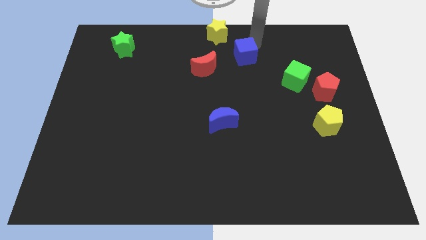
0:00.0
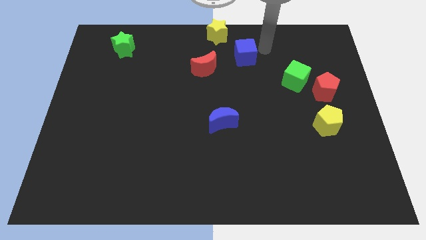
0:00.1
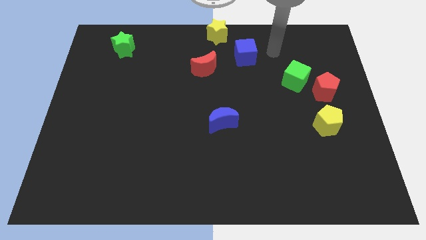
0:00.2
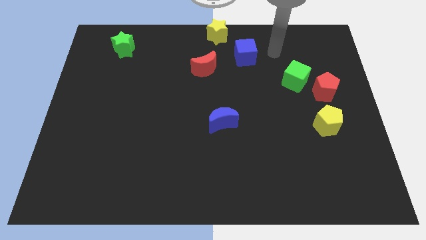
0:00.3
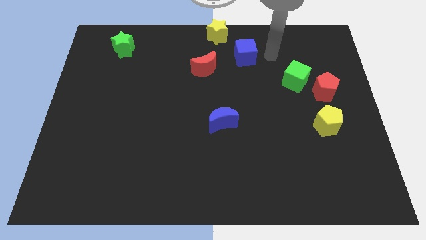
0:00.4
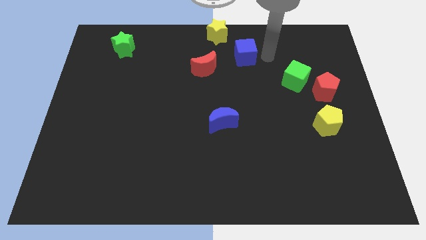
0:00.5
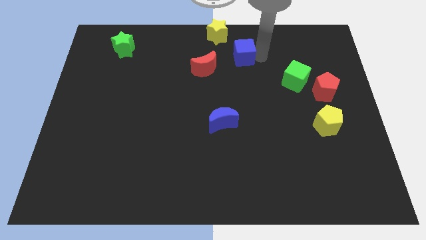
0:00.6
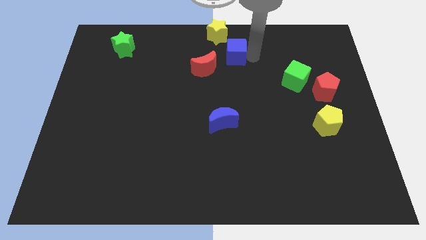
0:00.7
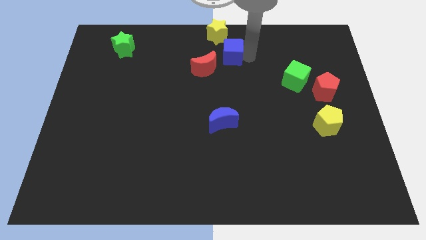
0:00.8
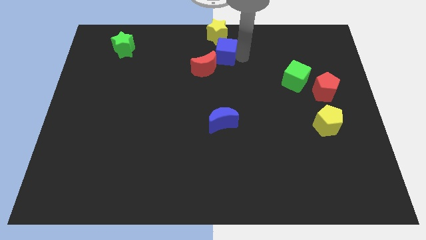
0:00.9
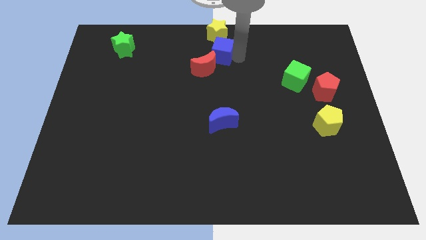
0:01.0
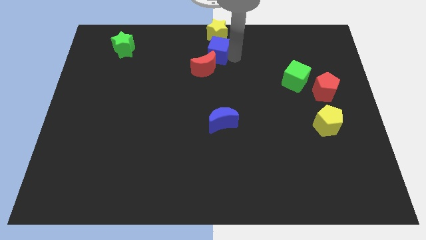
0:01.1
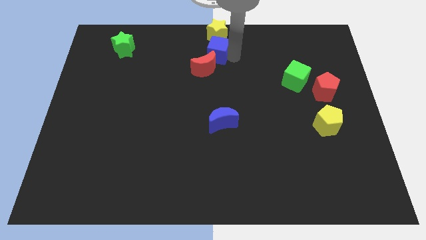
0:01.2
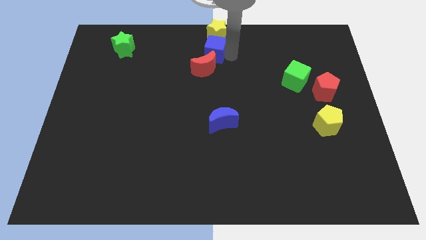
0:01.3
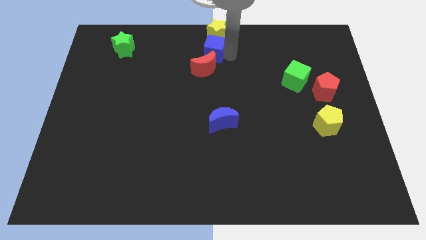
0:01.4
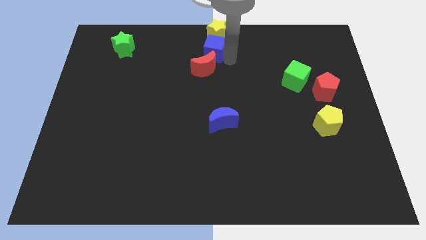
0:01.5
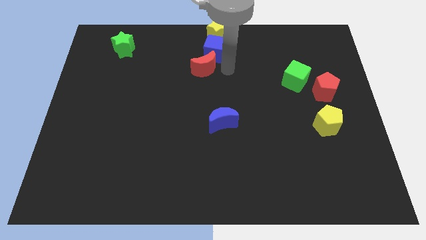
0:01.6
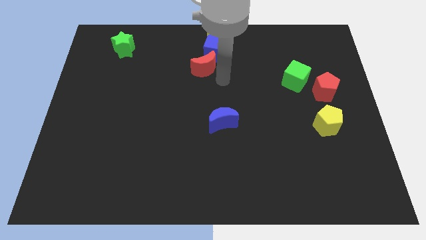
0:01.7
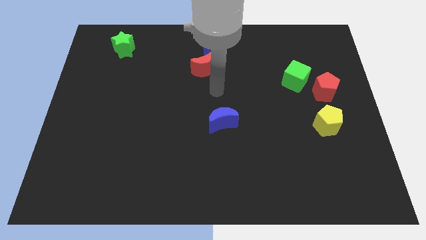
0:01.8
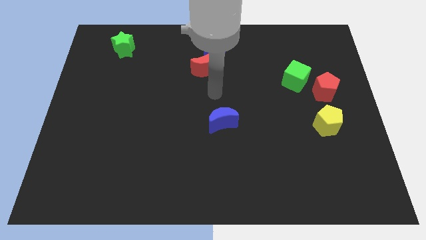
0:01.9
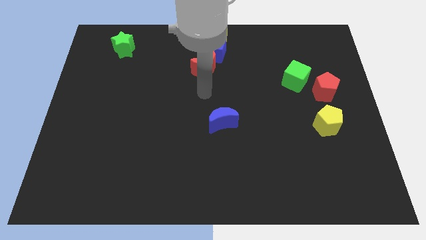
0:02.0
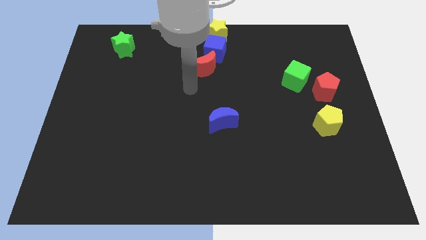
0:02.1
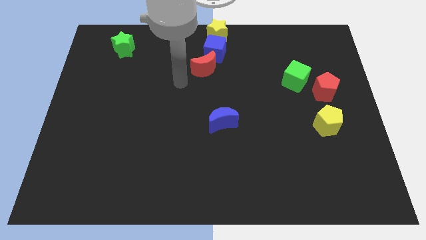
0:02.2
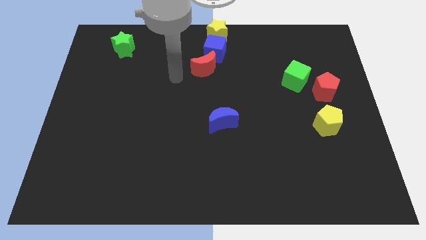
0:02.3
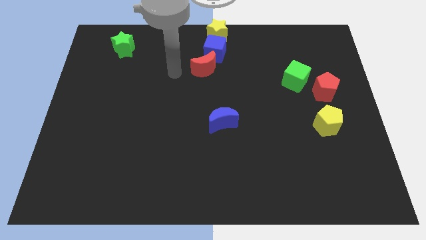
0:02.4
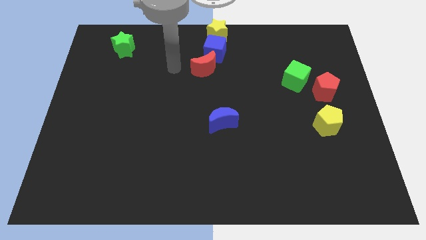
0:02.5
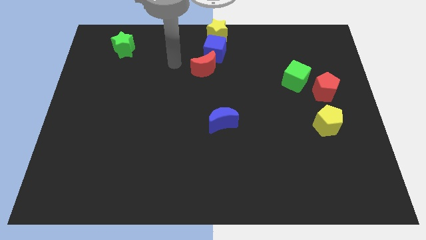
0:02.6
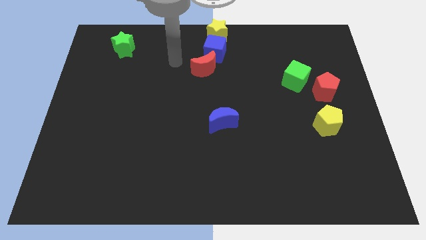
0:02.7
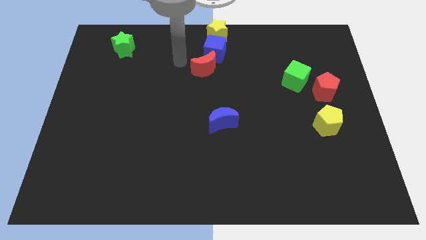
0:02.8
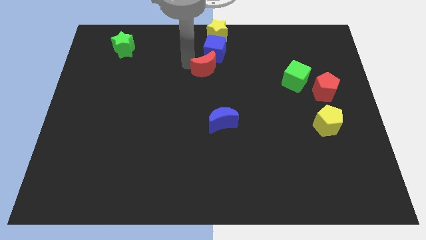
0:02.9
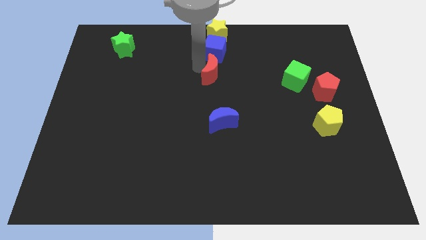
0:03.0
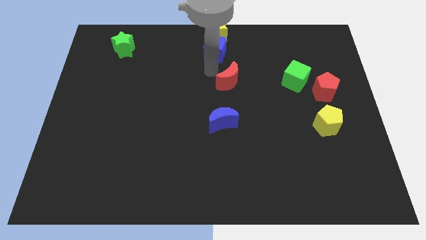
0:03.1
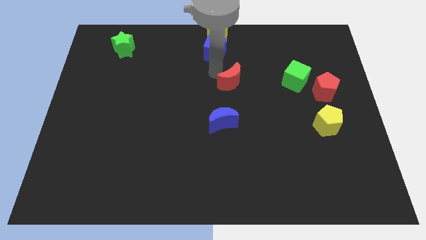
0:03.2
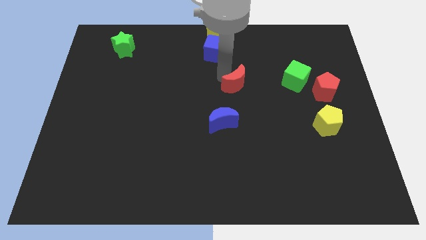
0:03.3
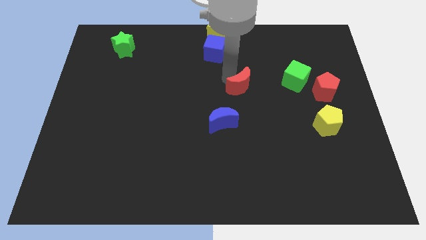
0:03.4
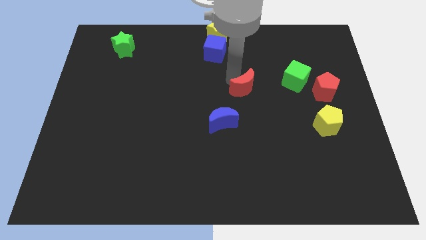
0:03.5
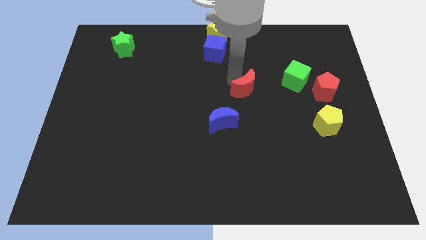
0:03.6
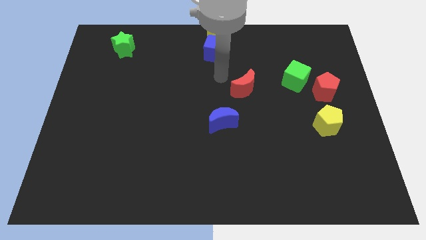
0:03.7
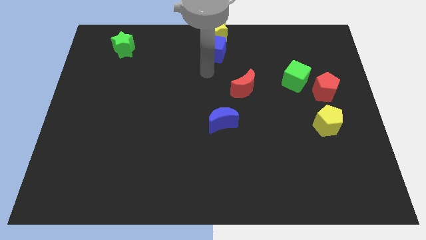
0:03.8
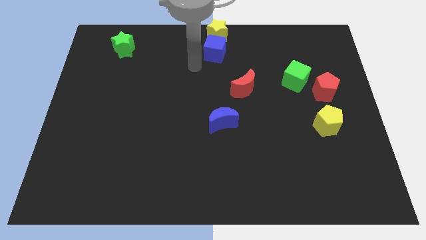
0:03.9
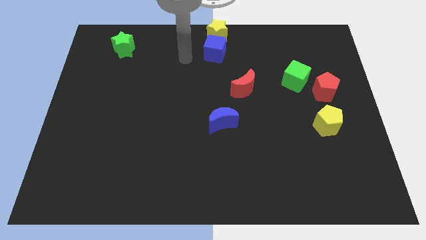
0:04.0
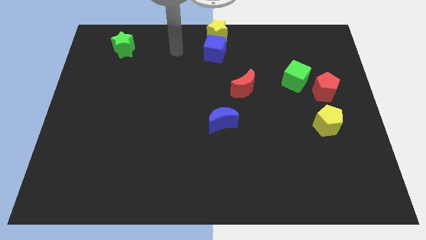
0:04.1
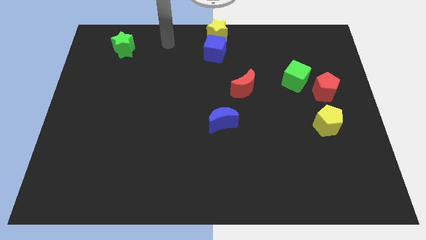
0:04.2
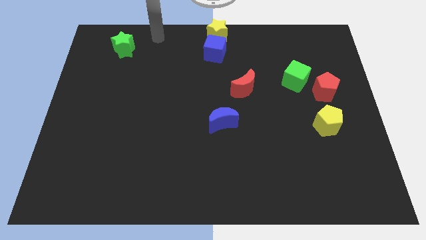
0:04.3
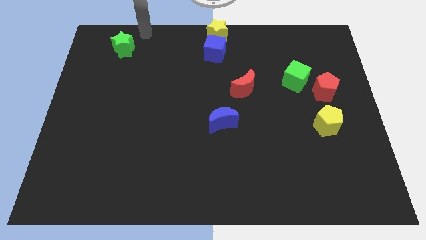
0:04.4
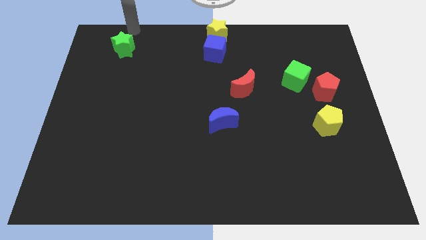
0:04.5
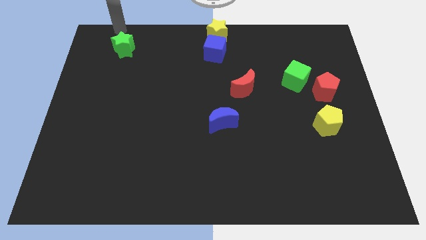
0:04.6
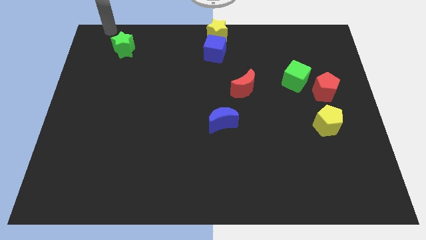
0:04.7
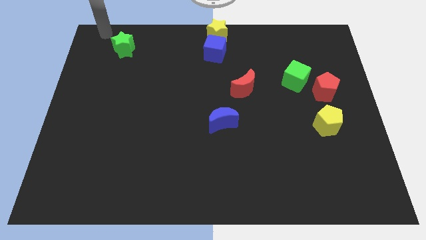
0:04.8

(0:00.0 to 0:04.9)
move the blue cube to the bottom of the yellow star

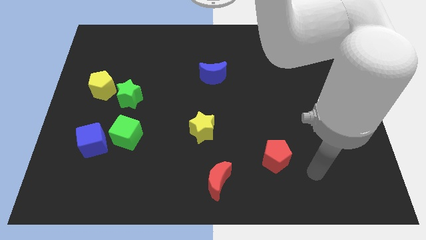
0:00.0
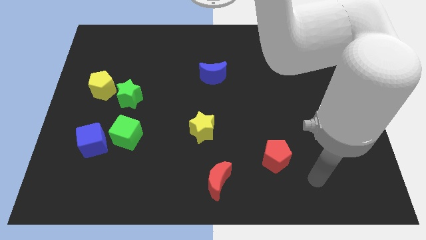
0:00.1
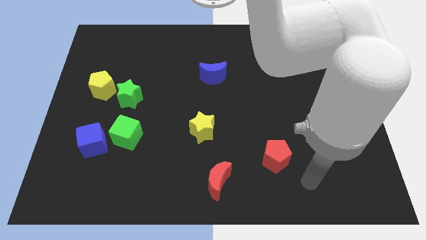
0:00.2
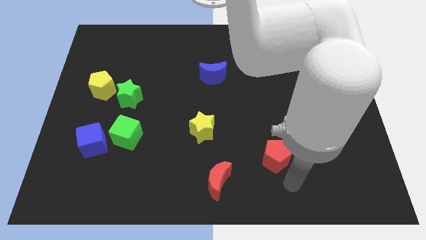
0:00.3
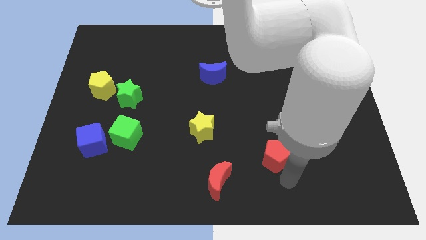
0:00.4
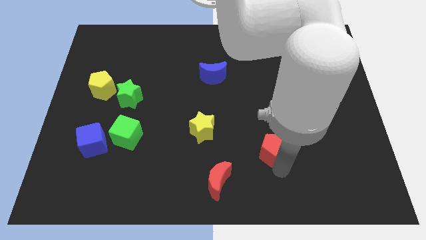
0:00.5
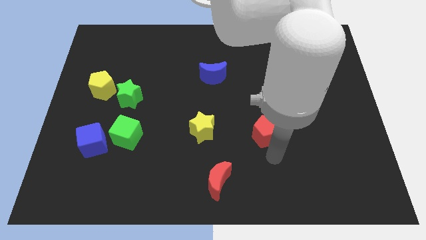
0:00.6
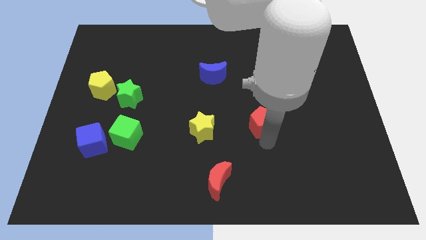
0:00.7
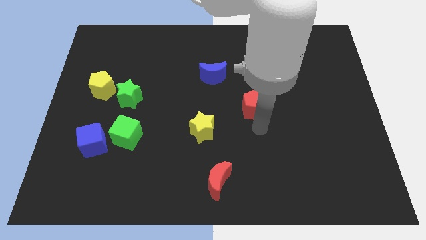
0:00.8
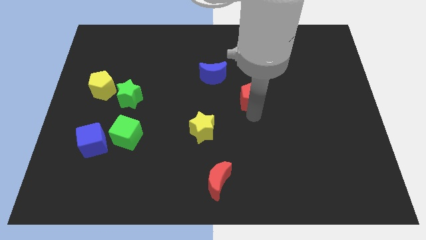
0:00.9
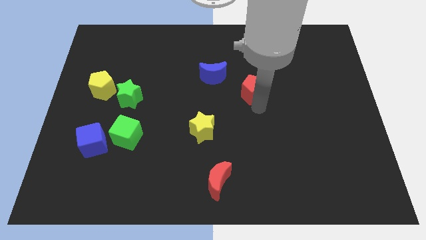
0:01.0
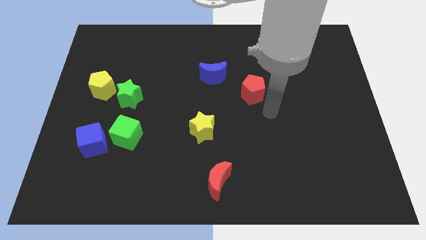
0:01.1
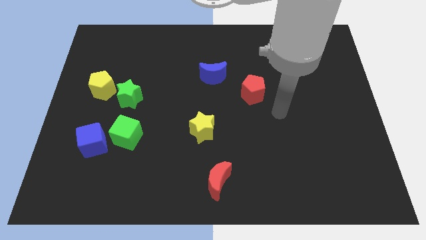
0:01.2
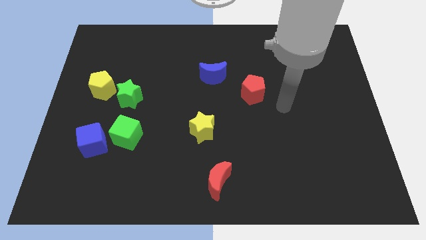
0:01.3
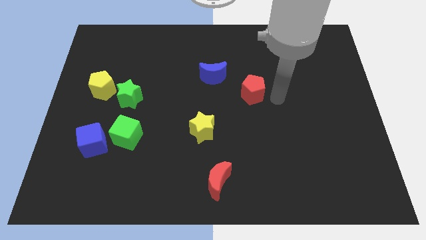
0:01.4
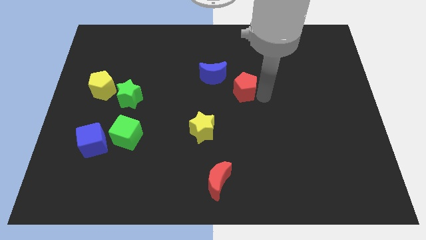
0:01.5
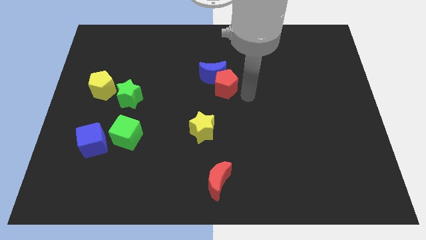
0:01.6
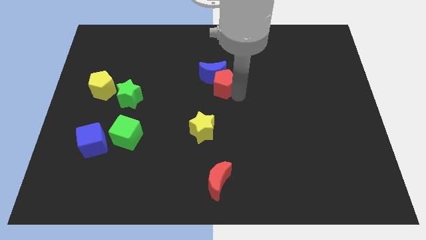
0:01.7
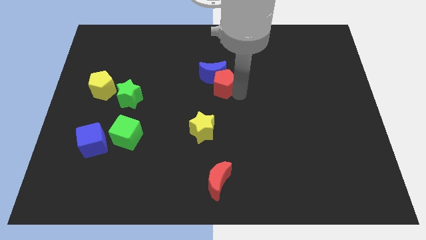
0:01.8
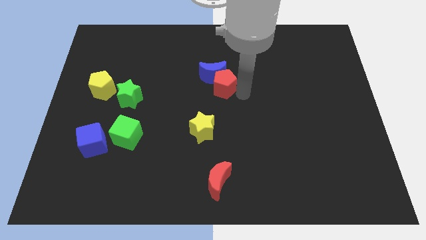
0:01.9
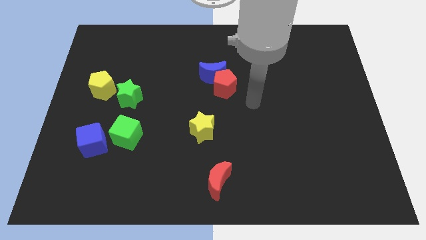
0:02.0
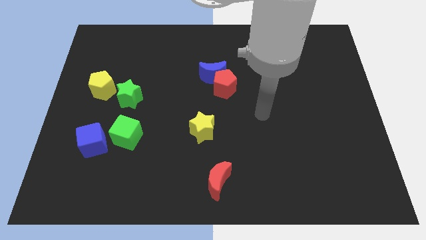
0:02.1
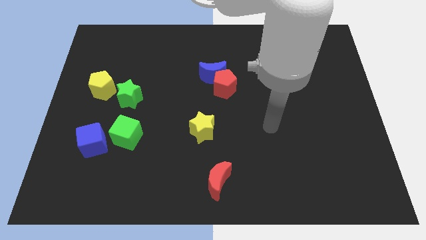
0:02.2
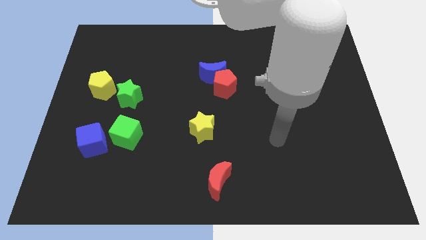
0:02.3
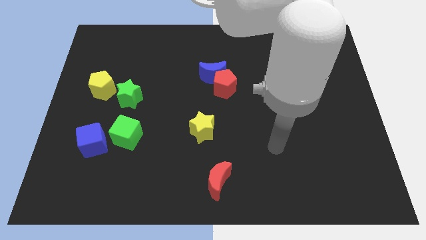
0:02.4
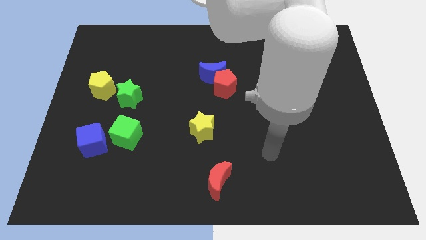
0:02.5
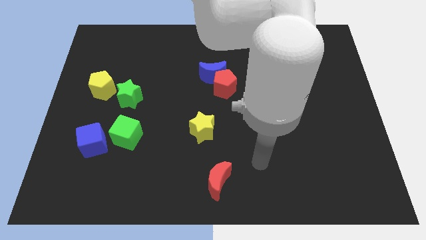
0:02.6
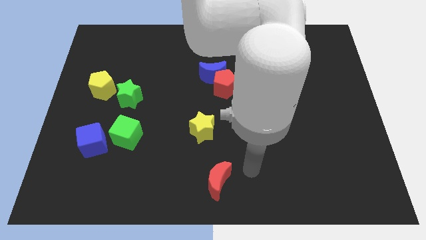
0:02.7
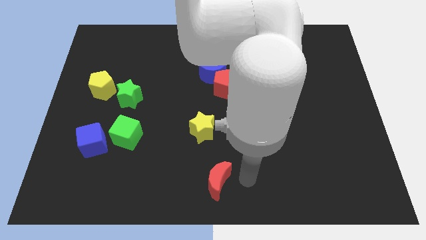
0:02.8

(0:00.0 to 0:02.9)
move the red pentagon into the blue crescent

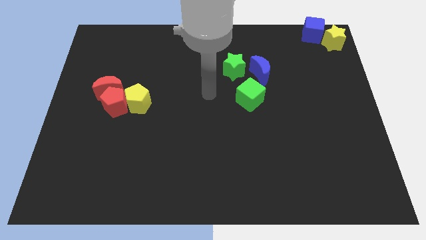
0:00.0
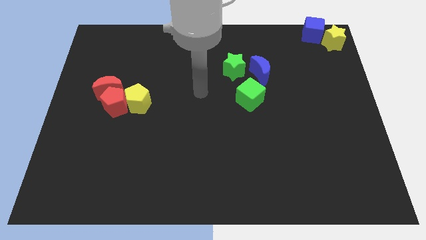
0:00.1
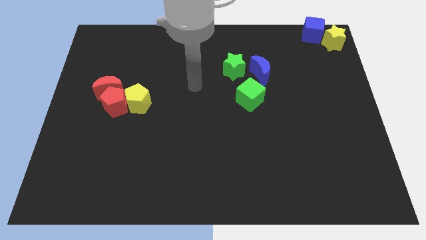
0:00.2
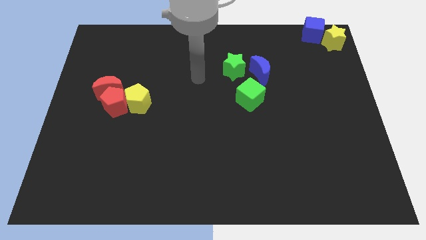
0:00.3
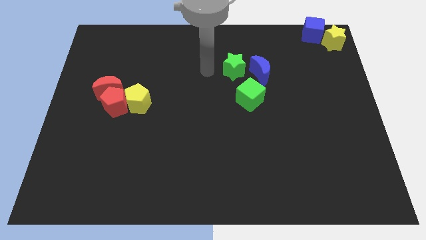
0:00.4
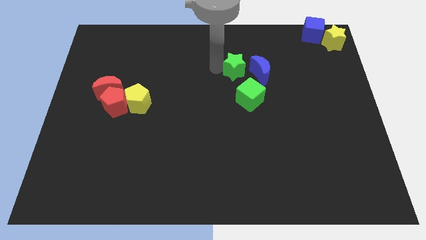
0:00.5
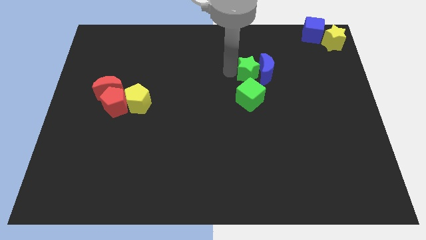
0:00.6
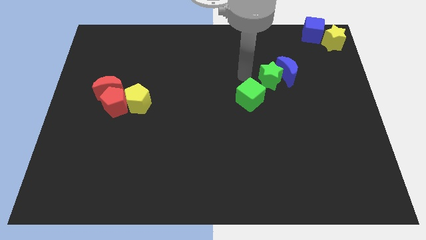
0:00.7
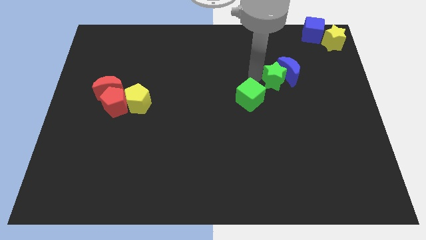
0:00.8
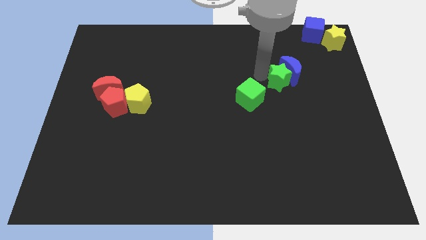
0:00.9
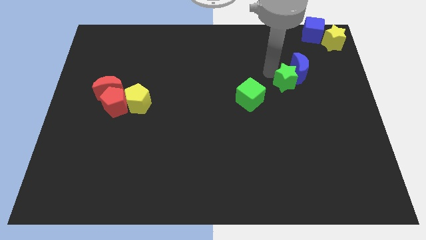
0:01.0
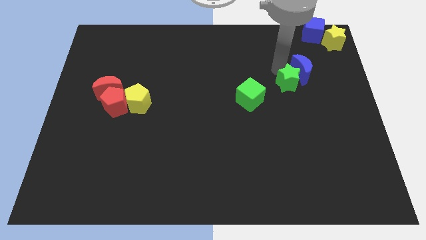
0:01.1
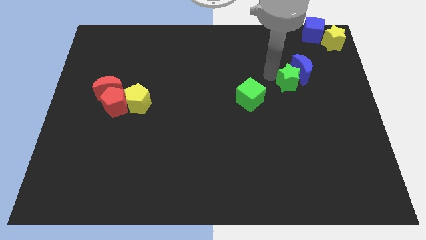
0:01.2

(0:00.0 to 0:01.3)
push the green star and blue moon to the top right side of the green cube
